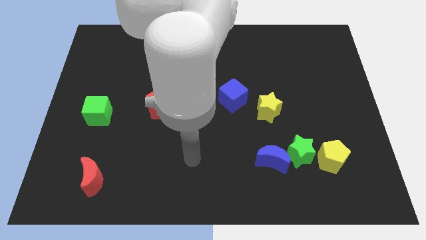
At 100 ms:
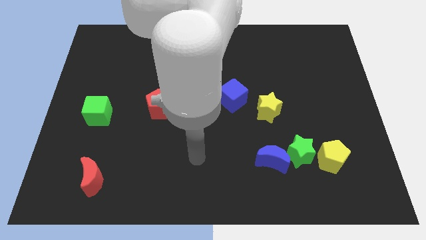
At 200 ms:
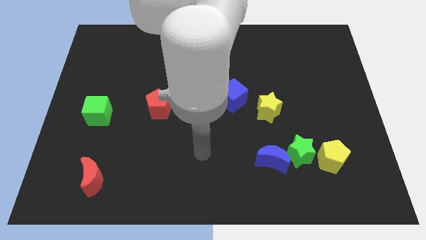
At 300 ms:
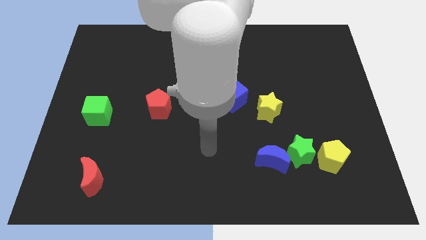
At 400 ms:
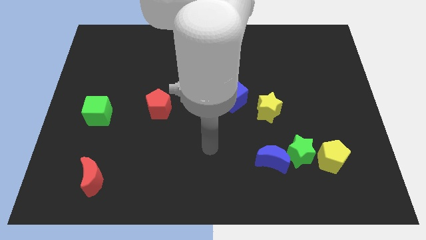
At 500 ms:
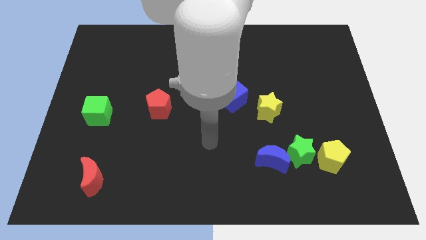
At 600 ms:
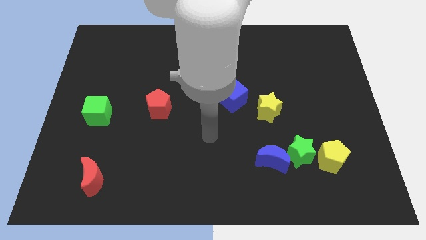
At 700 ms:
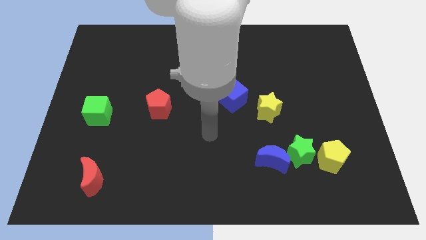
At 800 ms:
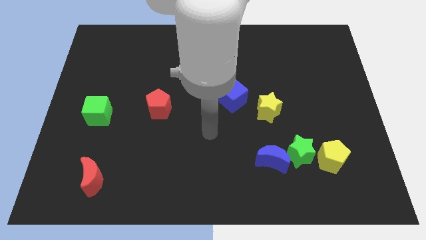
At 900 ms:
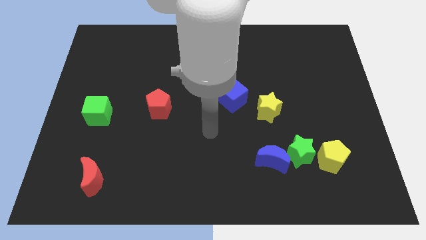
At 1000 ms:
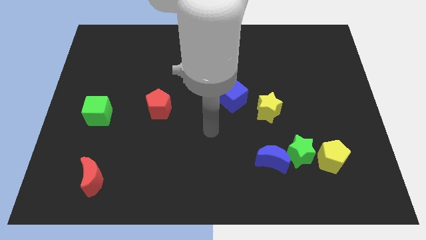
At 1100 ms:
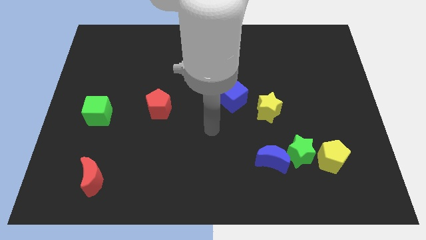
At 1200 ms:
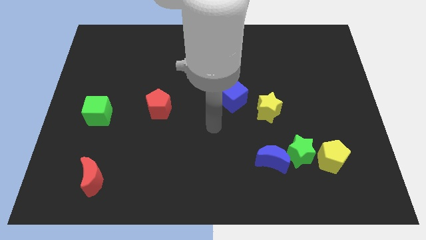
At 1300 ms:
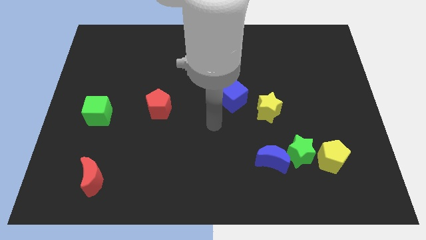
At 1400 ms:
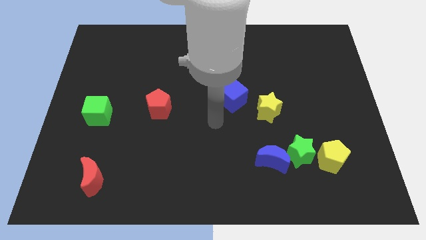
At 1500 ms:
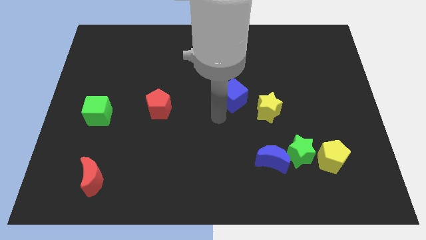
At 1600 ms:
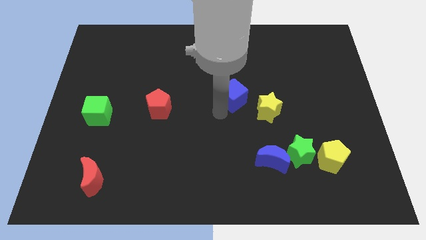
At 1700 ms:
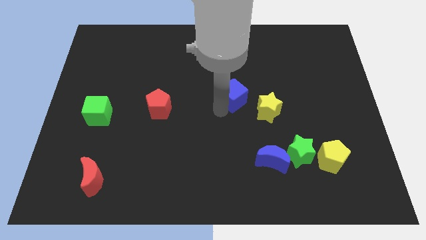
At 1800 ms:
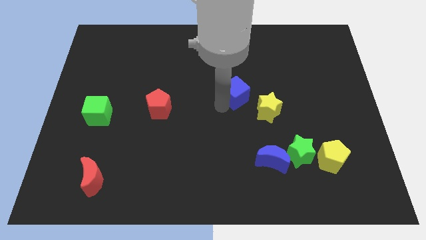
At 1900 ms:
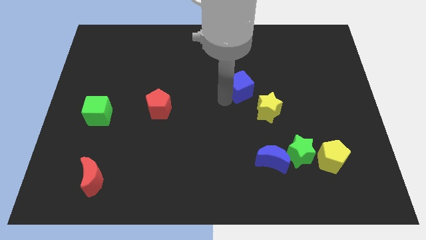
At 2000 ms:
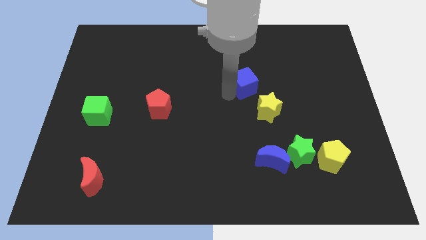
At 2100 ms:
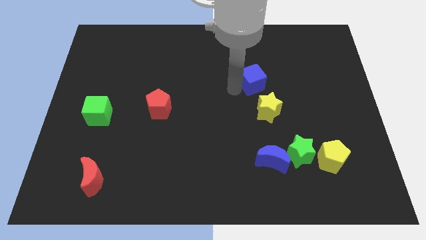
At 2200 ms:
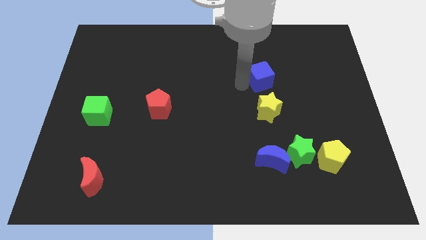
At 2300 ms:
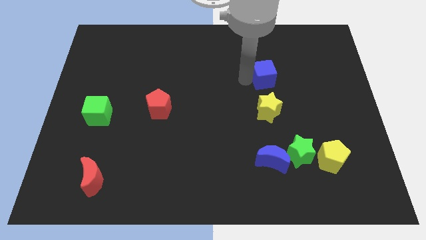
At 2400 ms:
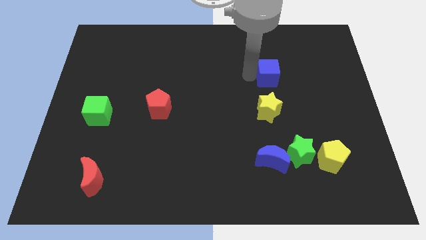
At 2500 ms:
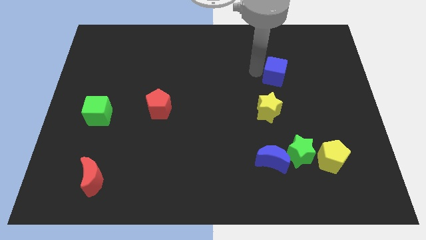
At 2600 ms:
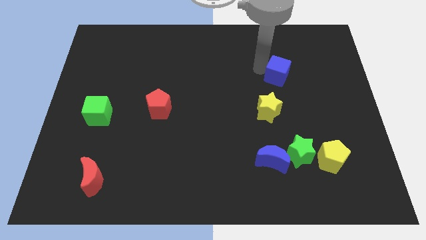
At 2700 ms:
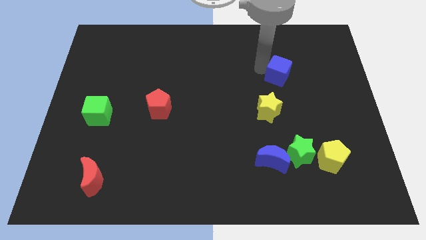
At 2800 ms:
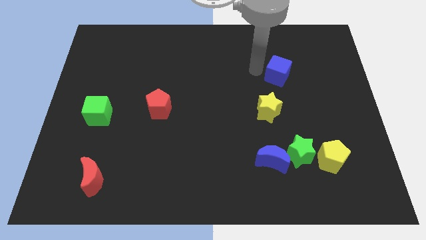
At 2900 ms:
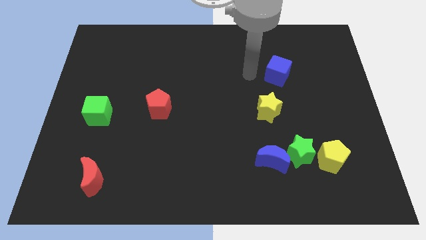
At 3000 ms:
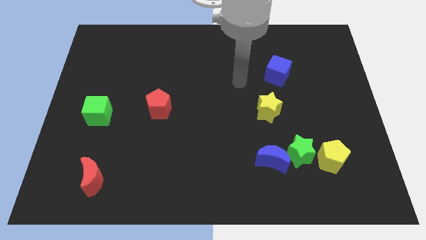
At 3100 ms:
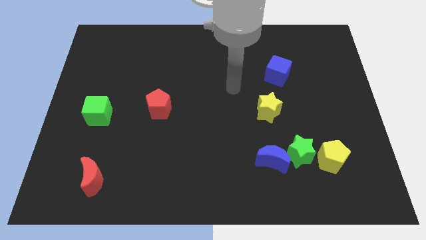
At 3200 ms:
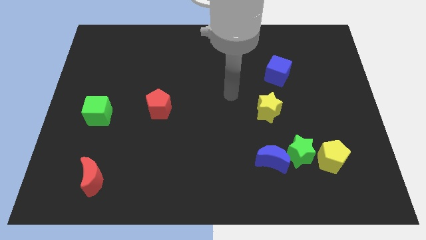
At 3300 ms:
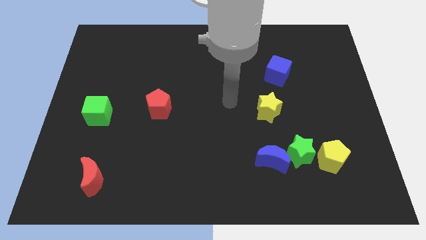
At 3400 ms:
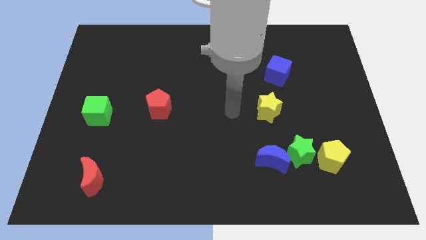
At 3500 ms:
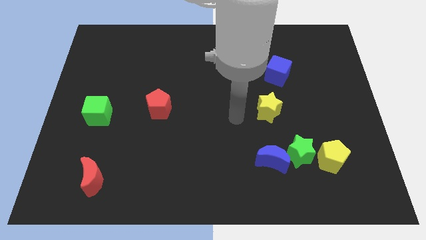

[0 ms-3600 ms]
push the blue cube to the vertical top of the yellow star

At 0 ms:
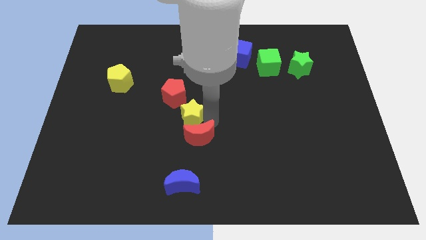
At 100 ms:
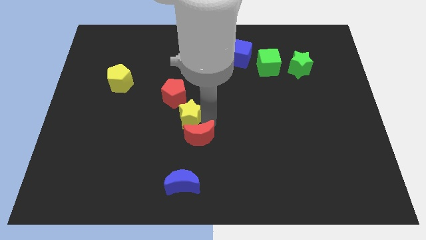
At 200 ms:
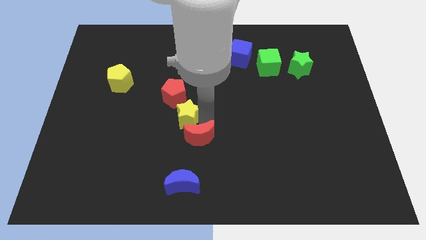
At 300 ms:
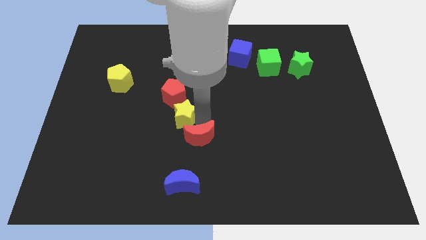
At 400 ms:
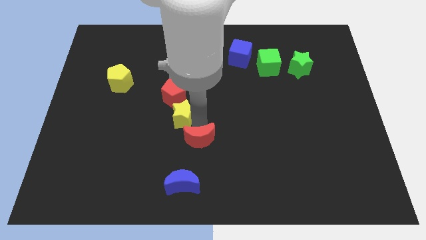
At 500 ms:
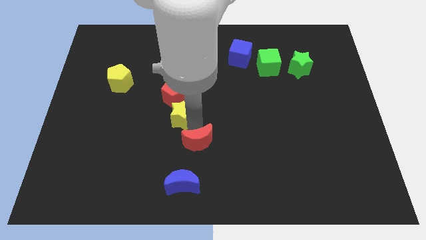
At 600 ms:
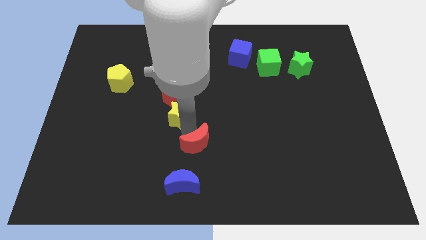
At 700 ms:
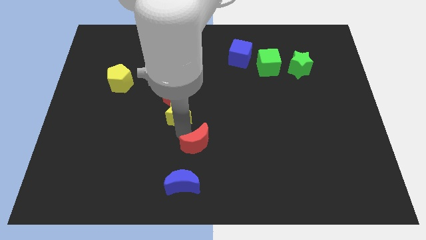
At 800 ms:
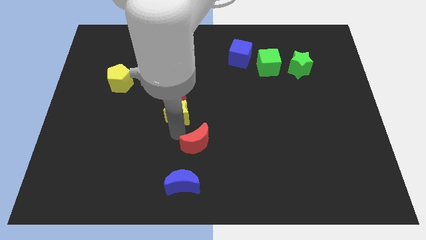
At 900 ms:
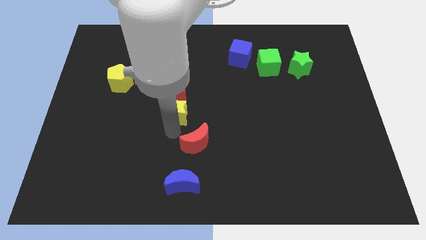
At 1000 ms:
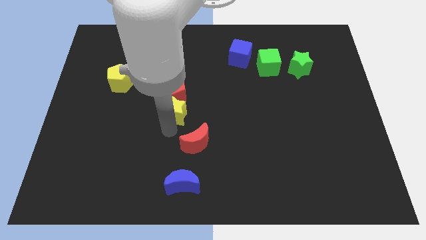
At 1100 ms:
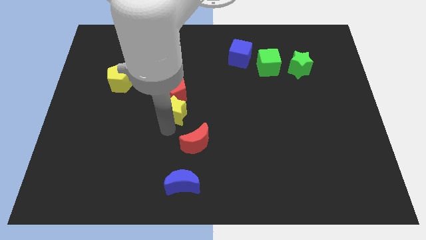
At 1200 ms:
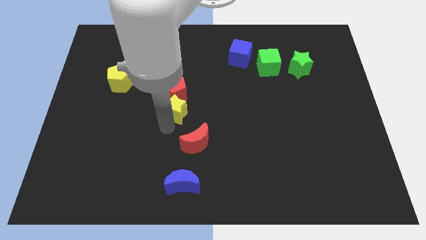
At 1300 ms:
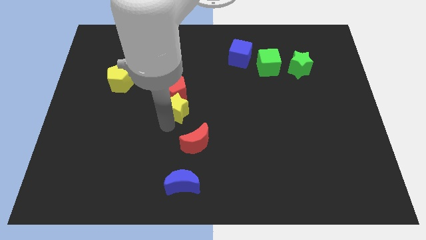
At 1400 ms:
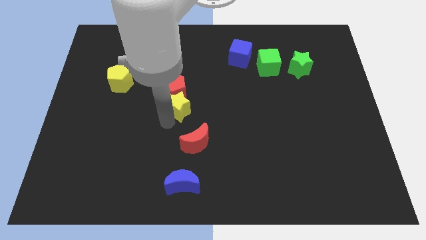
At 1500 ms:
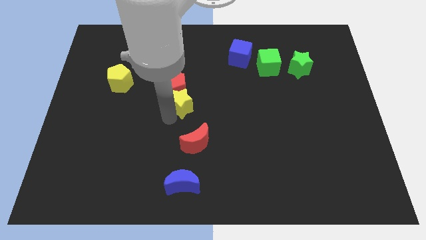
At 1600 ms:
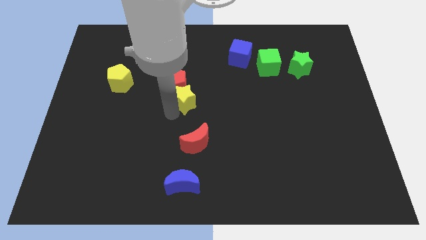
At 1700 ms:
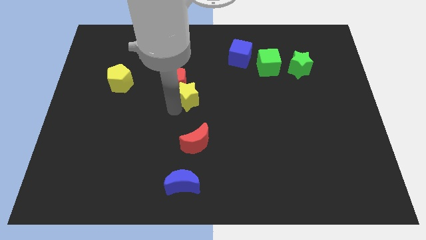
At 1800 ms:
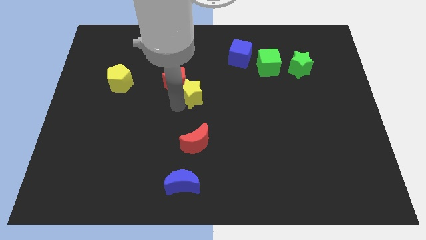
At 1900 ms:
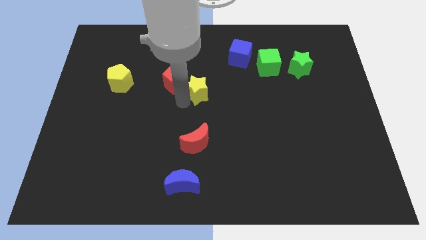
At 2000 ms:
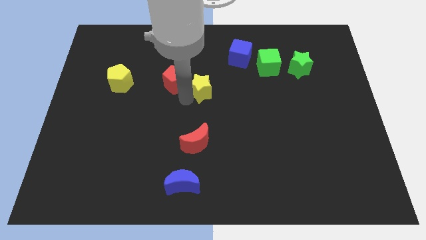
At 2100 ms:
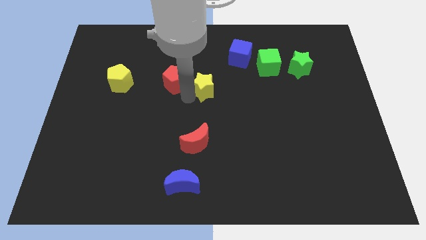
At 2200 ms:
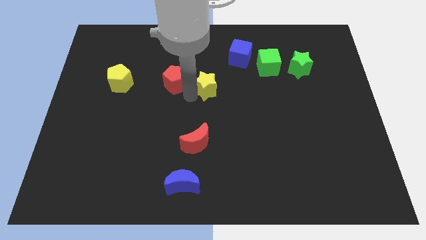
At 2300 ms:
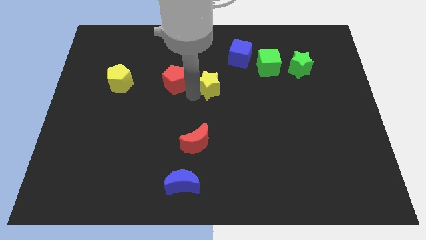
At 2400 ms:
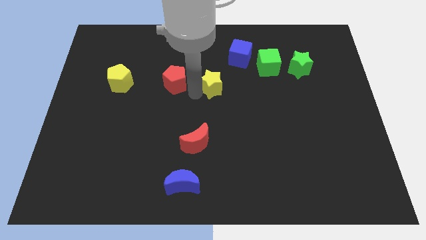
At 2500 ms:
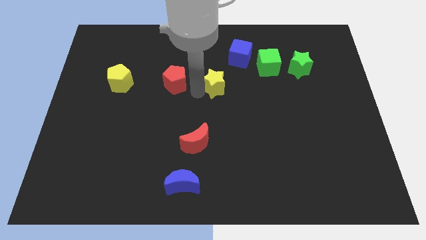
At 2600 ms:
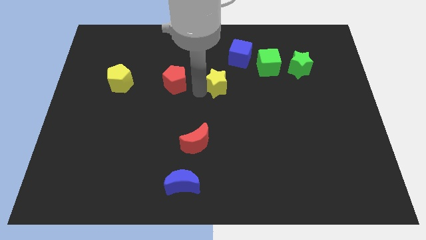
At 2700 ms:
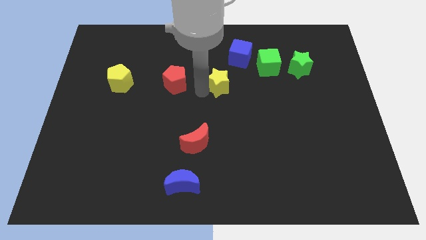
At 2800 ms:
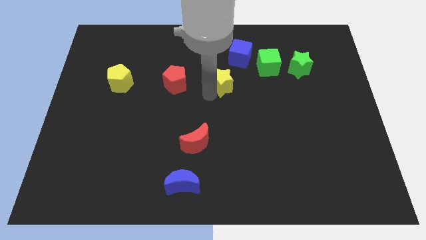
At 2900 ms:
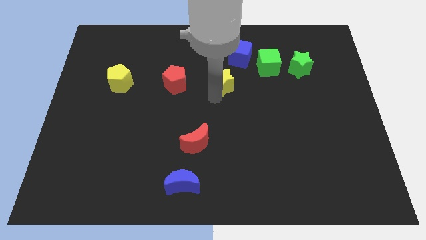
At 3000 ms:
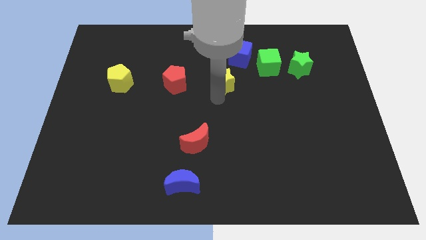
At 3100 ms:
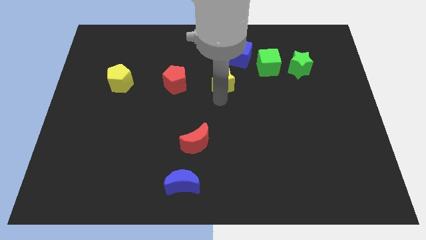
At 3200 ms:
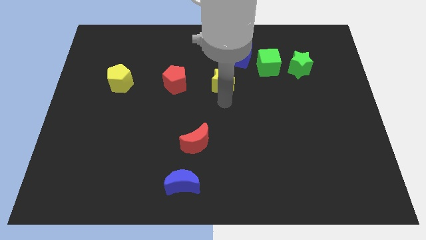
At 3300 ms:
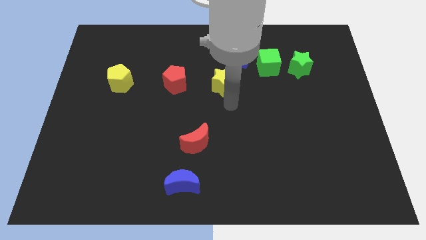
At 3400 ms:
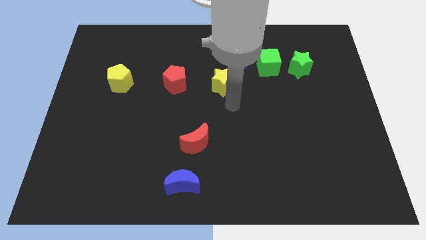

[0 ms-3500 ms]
push yellow star diagonally towards blue cube

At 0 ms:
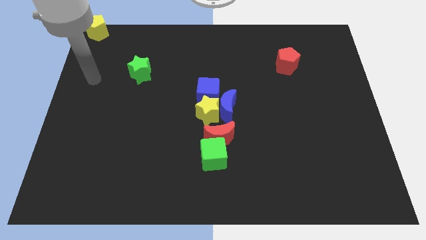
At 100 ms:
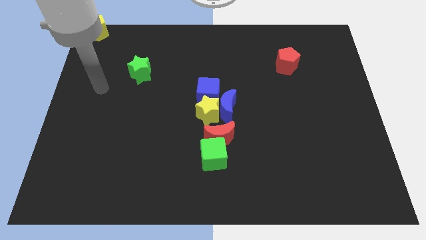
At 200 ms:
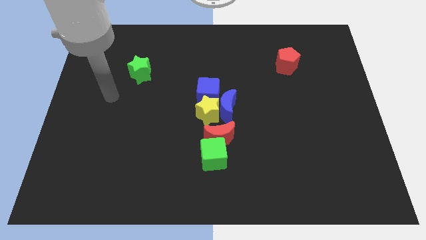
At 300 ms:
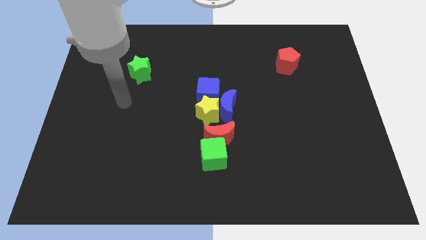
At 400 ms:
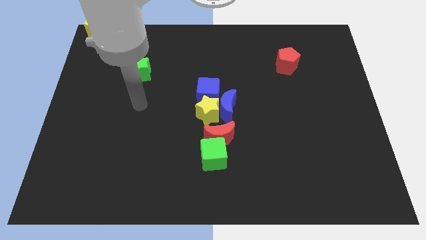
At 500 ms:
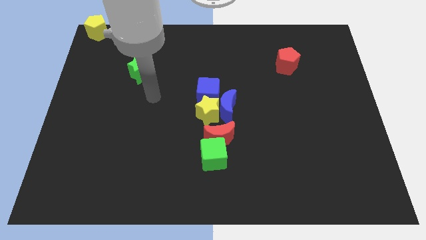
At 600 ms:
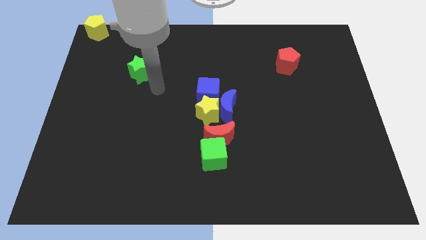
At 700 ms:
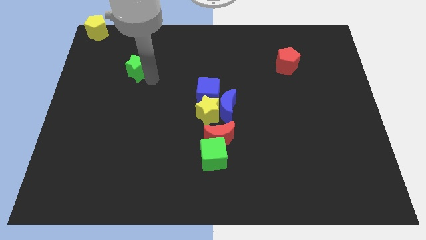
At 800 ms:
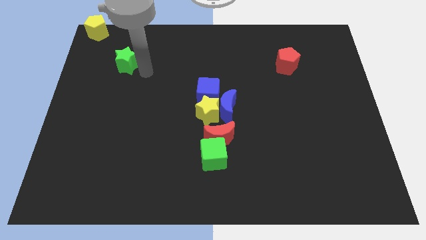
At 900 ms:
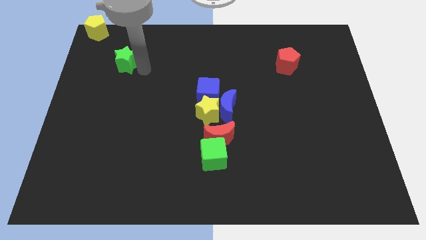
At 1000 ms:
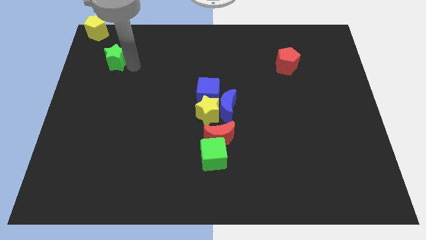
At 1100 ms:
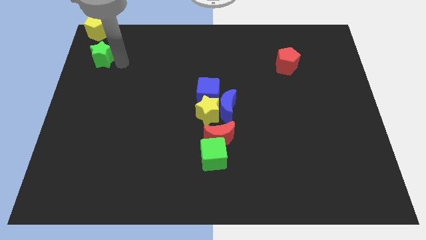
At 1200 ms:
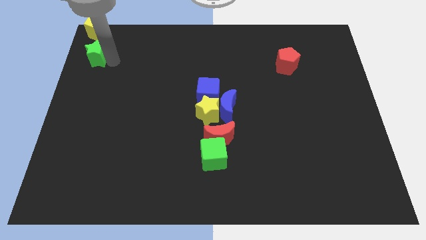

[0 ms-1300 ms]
push the green star to the bottom of the yellow pentagon

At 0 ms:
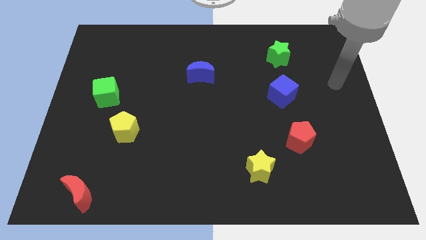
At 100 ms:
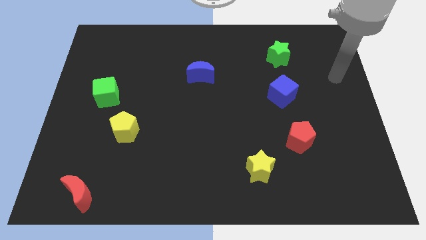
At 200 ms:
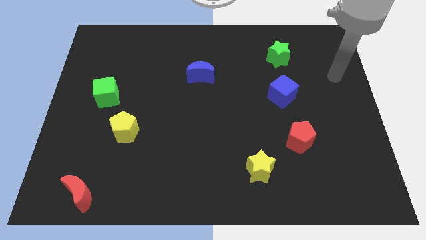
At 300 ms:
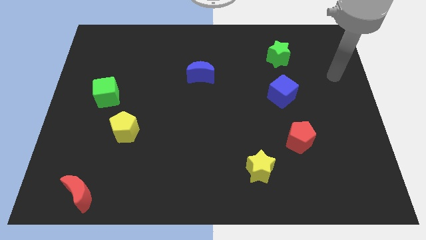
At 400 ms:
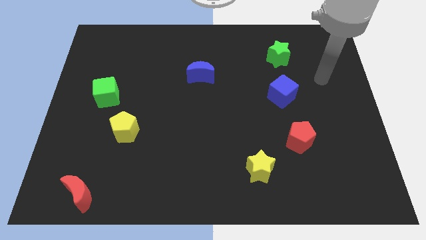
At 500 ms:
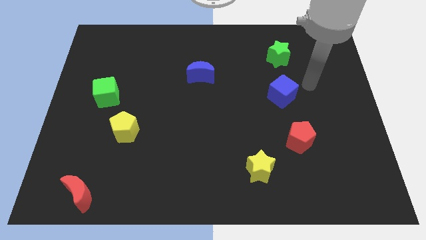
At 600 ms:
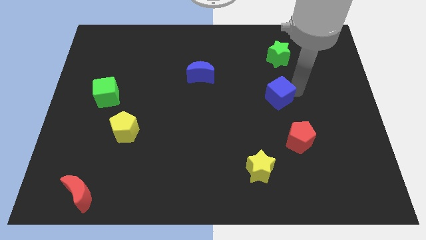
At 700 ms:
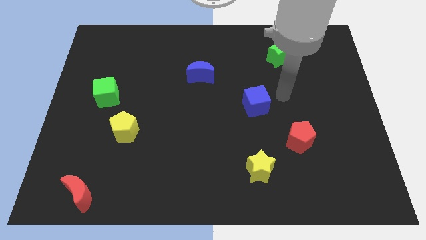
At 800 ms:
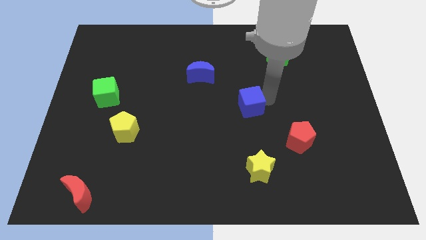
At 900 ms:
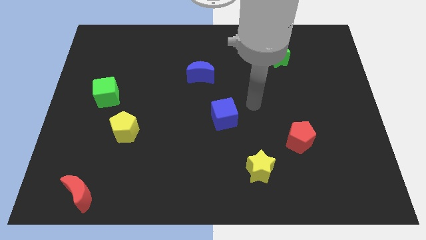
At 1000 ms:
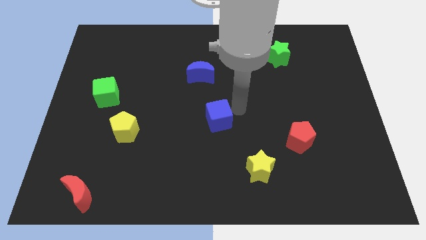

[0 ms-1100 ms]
move blue cube slightly left
